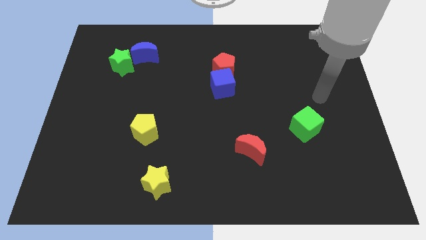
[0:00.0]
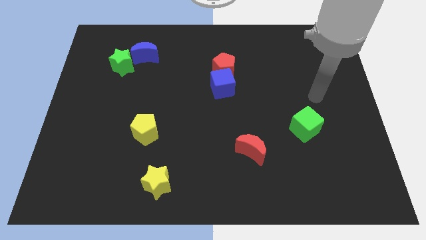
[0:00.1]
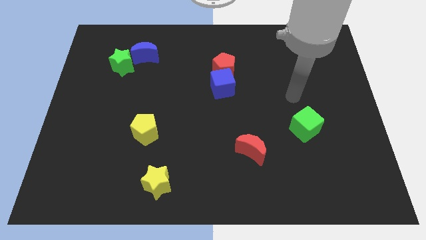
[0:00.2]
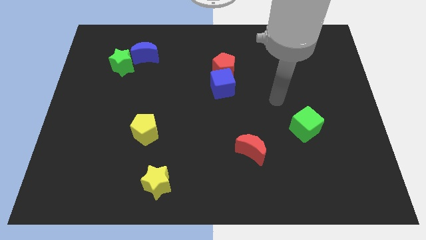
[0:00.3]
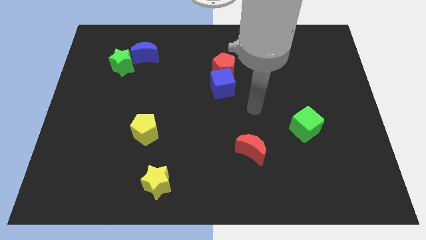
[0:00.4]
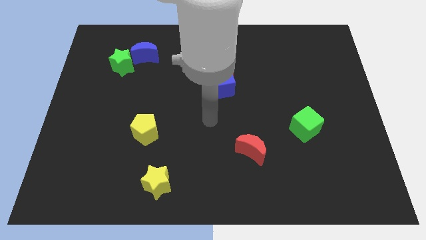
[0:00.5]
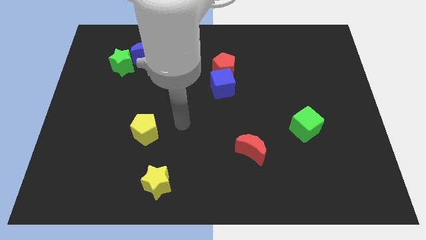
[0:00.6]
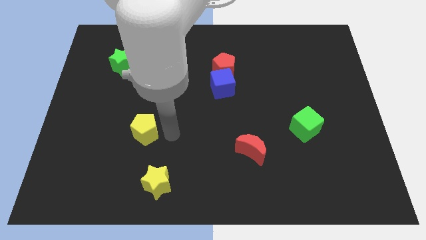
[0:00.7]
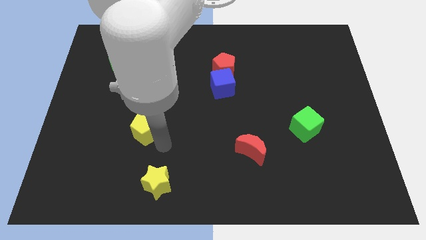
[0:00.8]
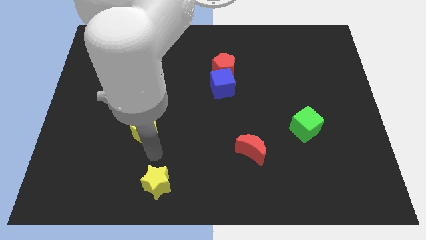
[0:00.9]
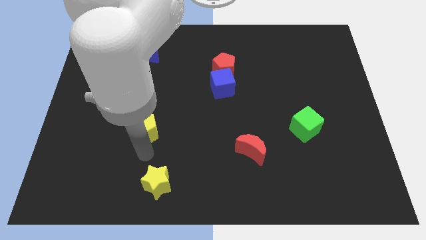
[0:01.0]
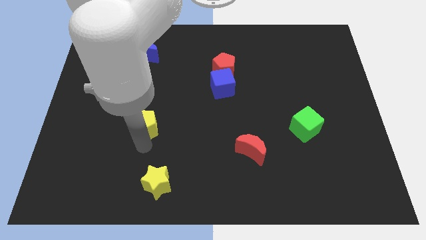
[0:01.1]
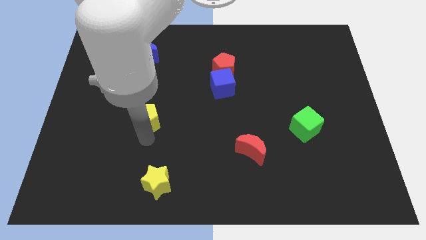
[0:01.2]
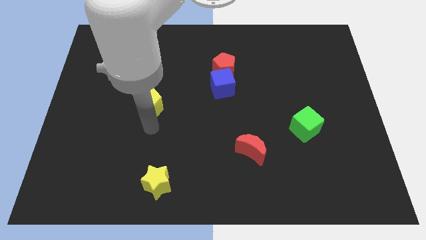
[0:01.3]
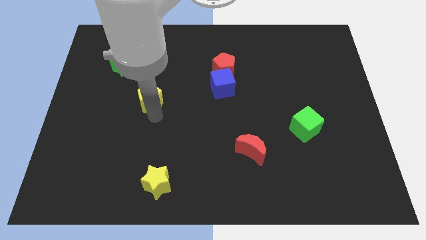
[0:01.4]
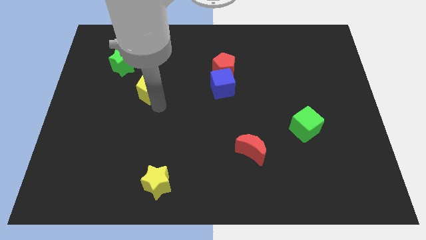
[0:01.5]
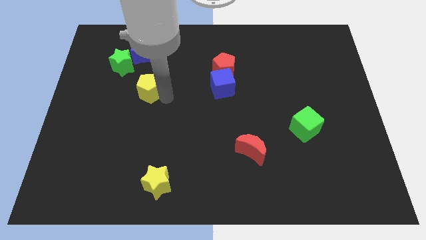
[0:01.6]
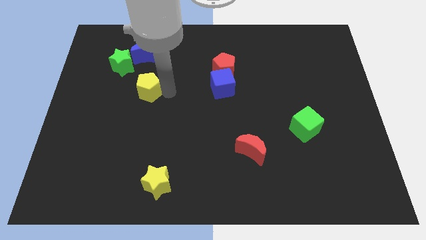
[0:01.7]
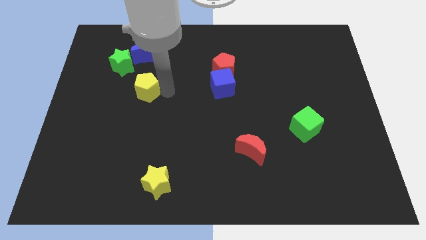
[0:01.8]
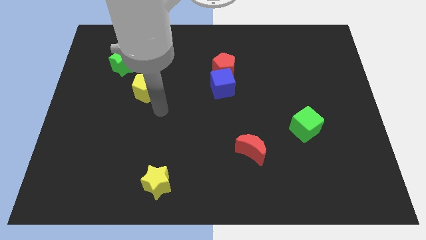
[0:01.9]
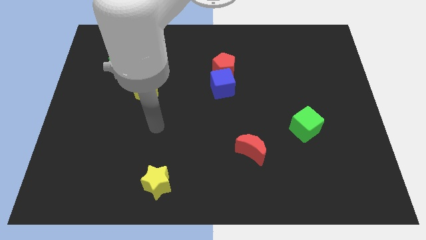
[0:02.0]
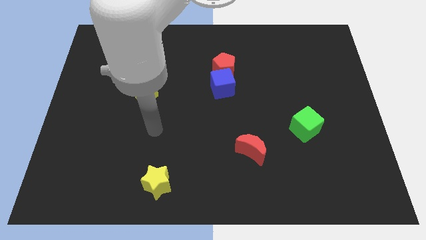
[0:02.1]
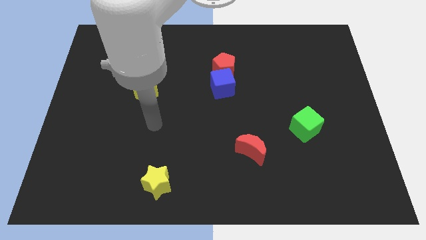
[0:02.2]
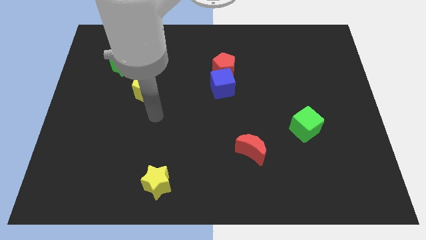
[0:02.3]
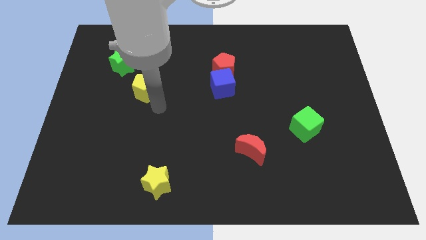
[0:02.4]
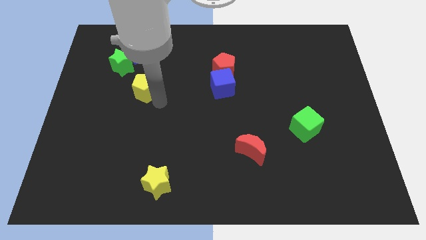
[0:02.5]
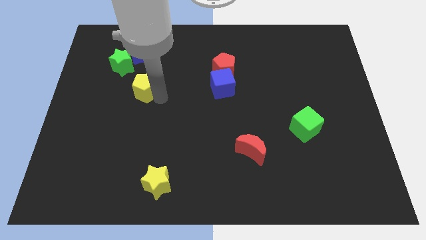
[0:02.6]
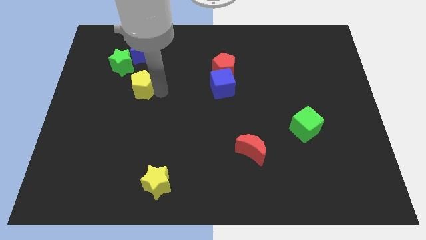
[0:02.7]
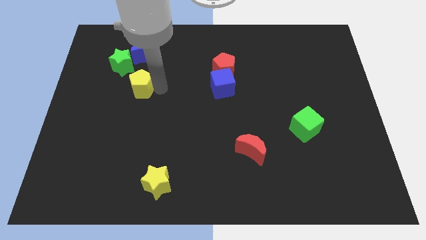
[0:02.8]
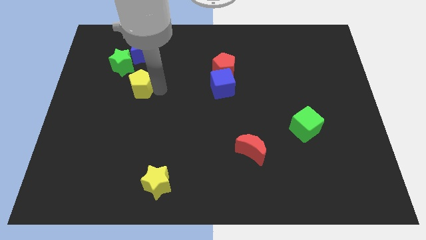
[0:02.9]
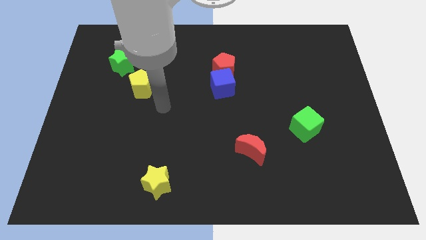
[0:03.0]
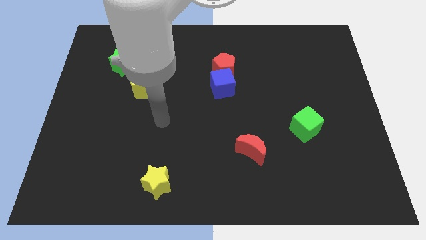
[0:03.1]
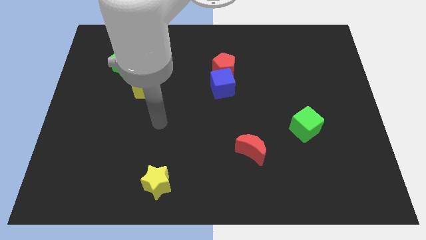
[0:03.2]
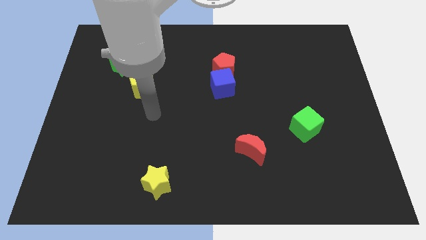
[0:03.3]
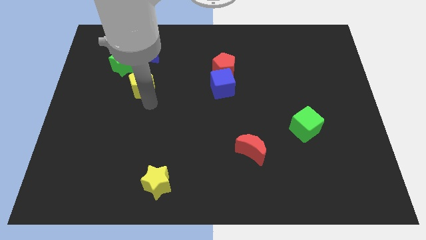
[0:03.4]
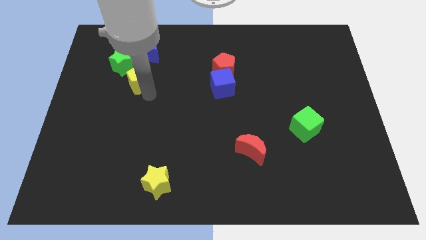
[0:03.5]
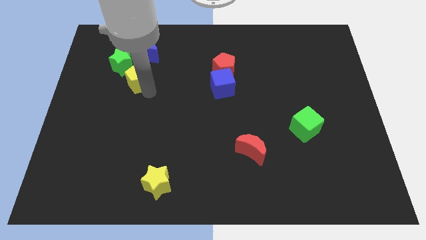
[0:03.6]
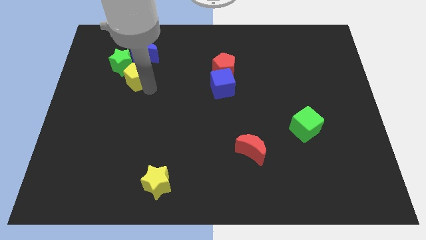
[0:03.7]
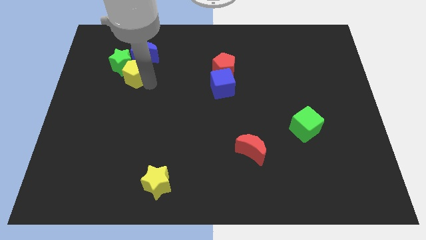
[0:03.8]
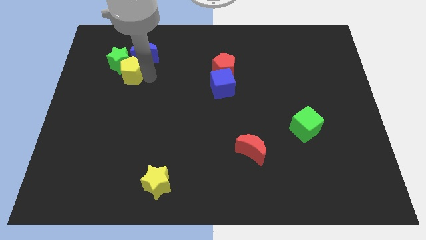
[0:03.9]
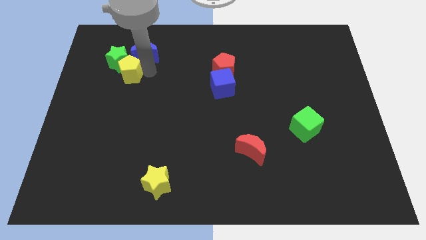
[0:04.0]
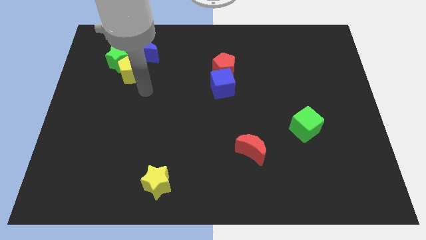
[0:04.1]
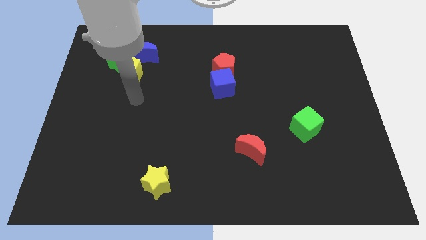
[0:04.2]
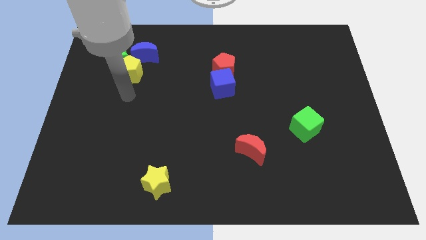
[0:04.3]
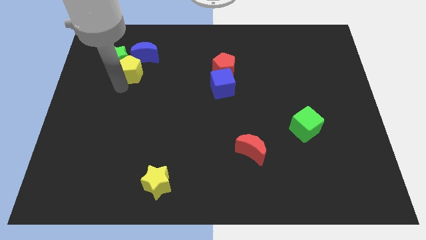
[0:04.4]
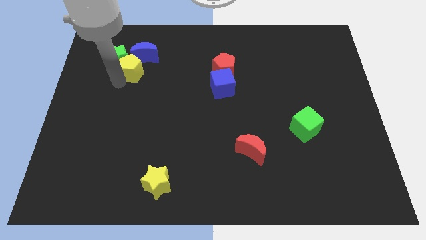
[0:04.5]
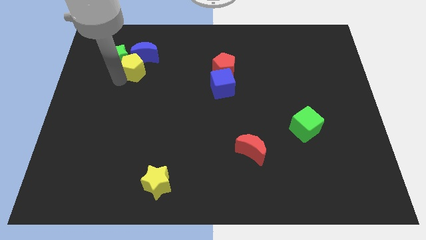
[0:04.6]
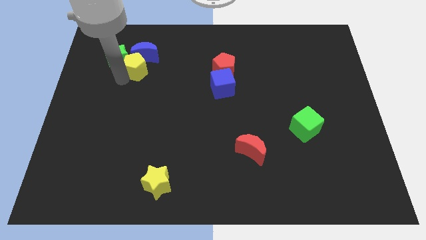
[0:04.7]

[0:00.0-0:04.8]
put the yellow pentagon towards the blue moon

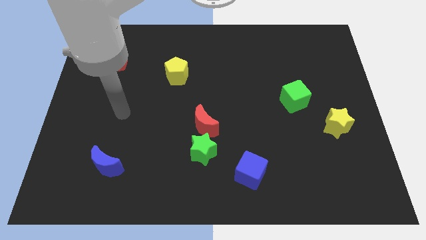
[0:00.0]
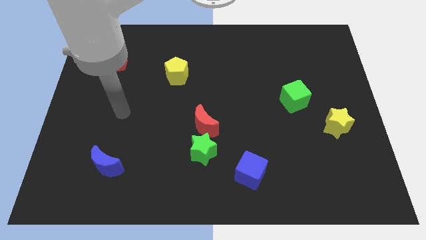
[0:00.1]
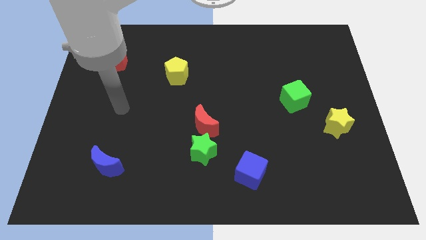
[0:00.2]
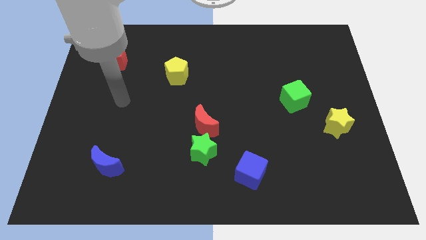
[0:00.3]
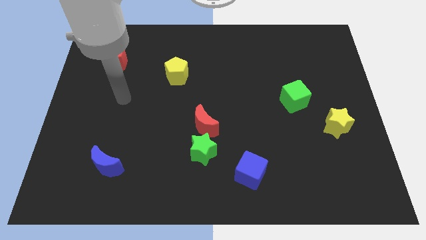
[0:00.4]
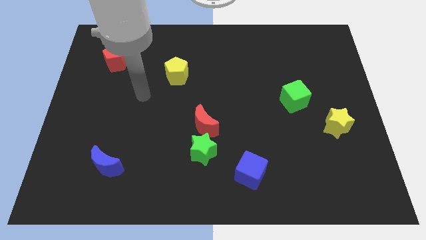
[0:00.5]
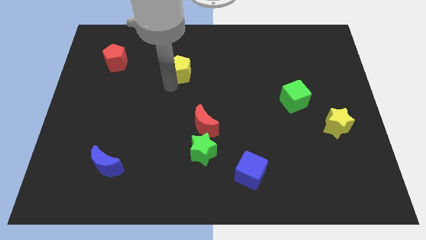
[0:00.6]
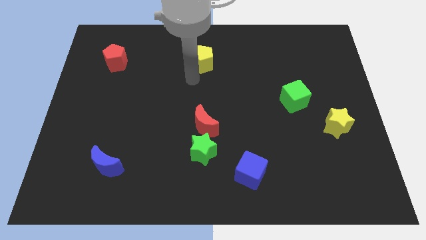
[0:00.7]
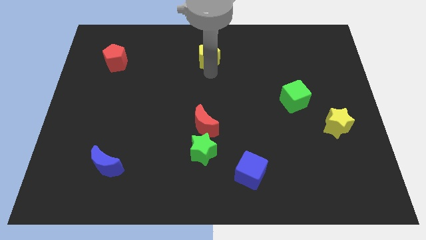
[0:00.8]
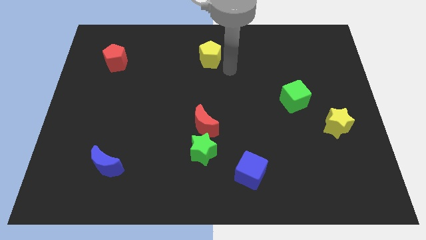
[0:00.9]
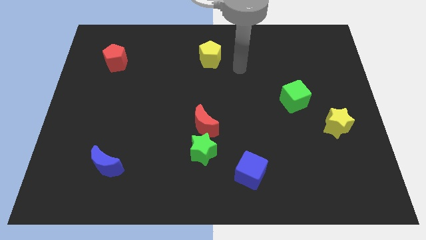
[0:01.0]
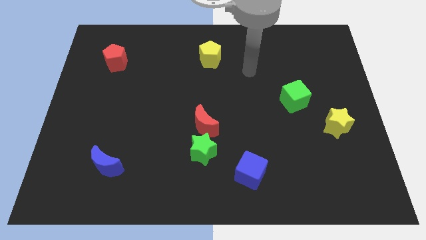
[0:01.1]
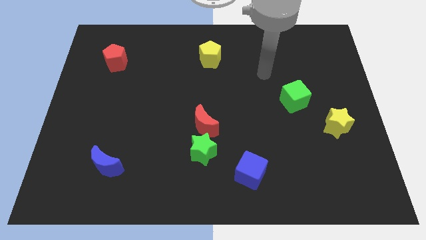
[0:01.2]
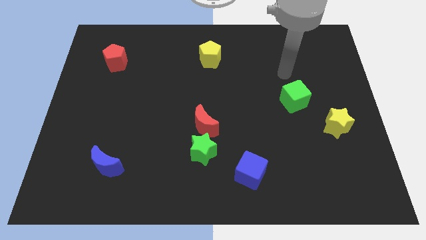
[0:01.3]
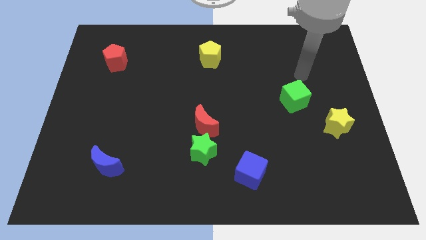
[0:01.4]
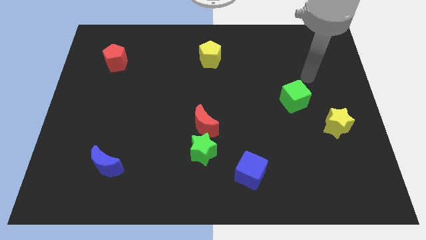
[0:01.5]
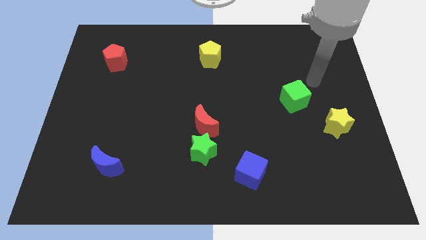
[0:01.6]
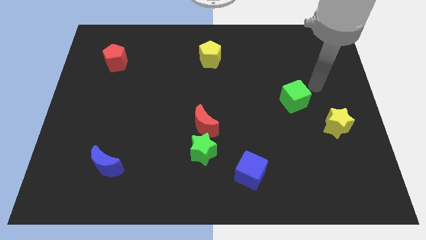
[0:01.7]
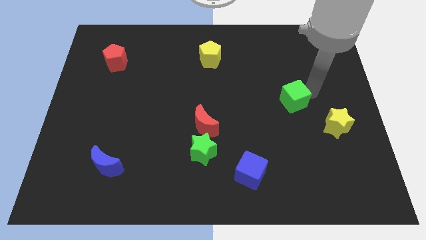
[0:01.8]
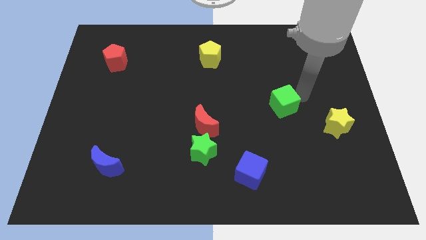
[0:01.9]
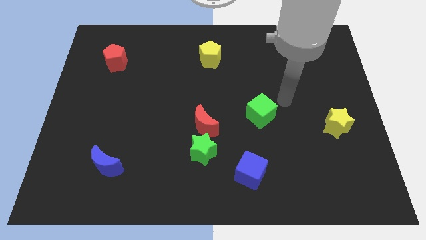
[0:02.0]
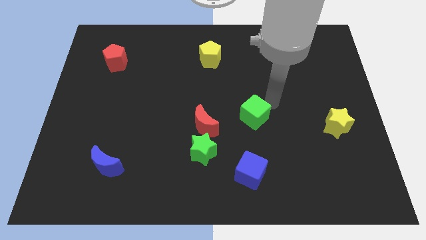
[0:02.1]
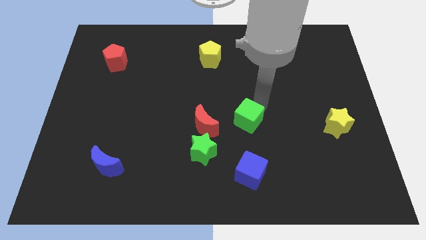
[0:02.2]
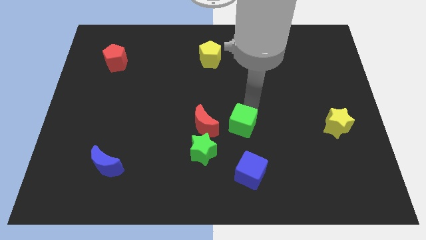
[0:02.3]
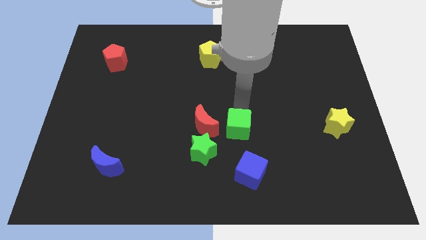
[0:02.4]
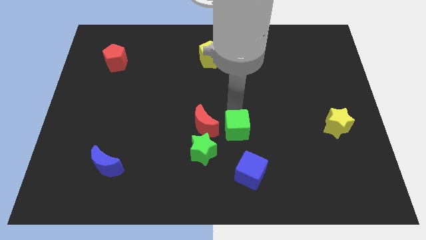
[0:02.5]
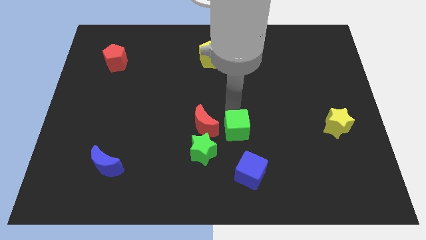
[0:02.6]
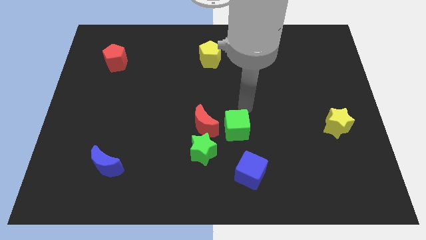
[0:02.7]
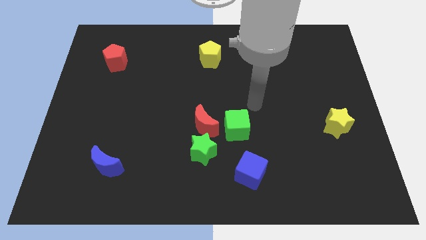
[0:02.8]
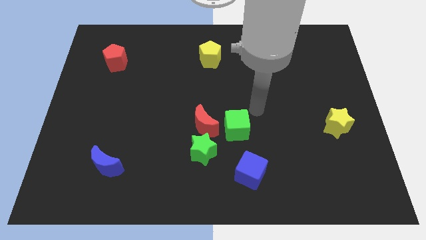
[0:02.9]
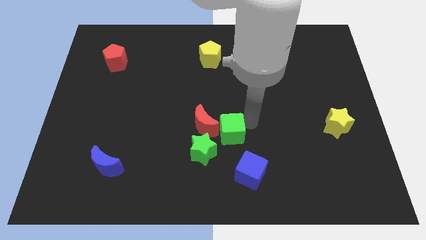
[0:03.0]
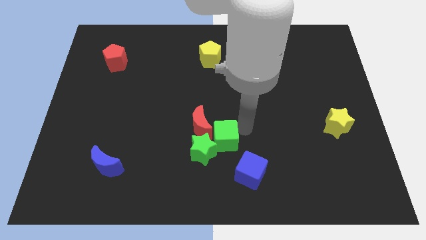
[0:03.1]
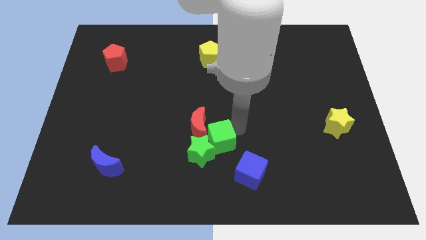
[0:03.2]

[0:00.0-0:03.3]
put the green cube towards the red moon

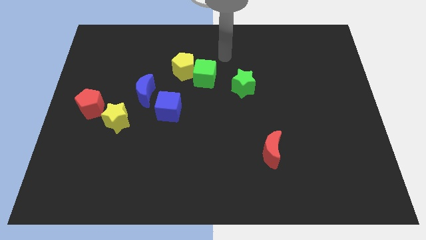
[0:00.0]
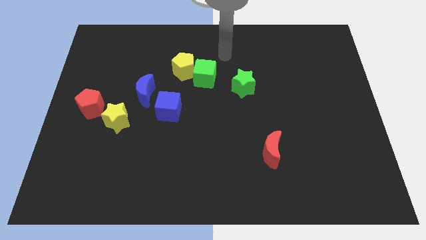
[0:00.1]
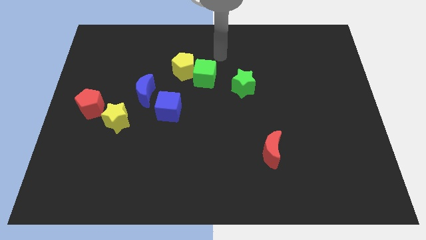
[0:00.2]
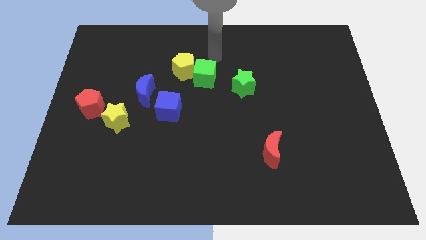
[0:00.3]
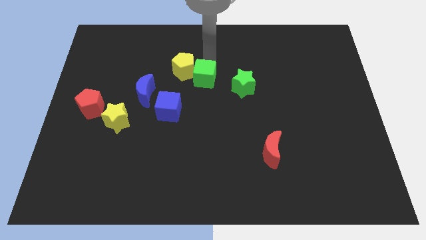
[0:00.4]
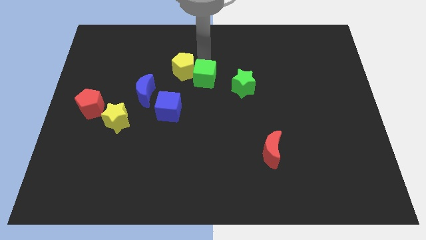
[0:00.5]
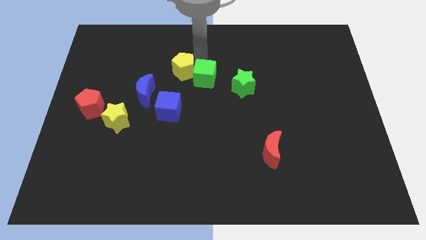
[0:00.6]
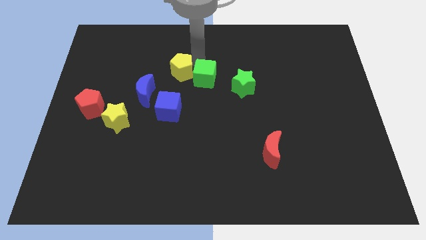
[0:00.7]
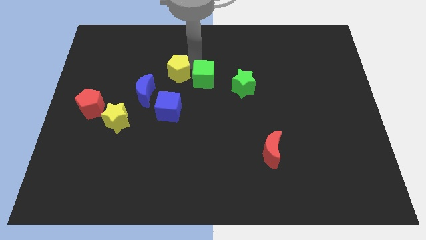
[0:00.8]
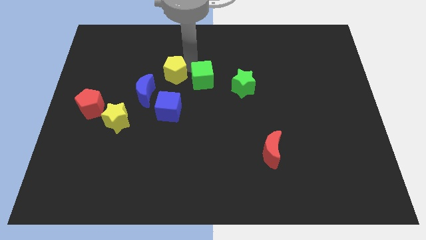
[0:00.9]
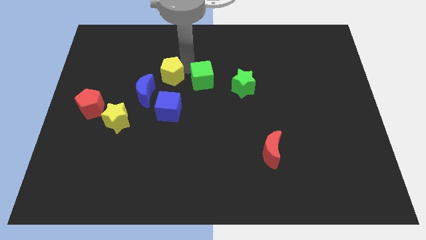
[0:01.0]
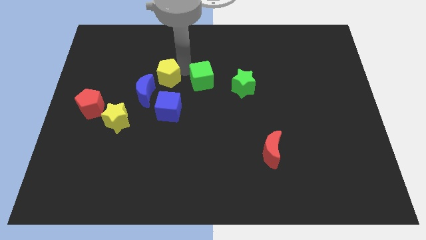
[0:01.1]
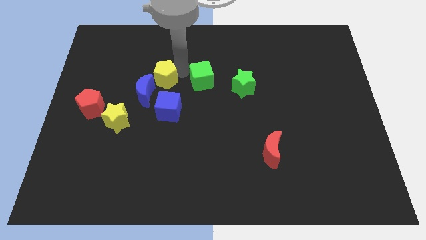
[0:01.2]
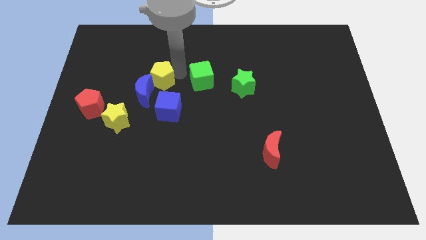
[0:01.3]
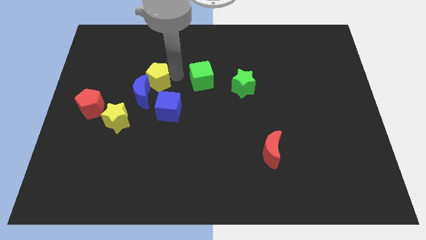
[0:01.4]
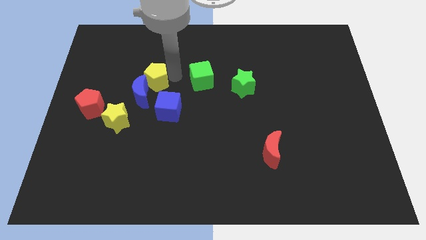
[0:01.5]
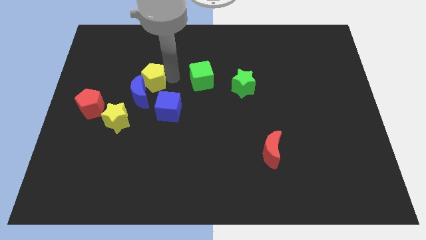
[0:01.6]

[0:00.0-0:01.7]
move the yellow pentagon to the blue moon
